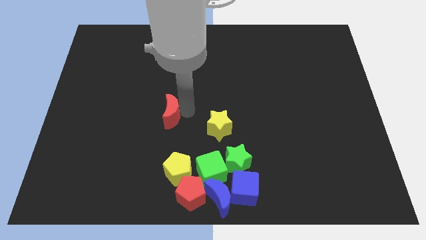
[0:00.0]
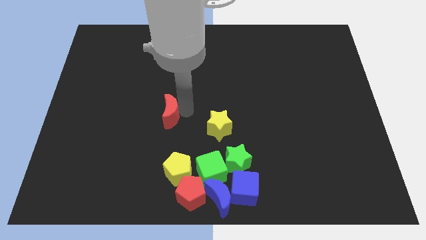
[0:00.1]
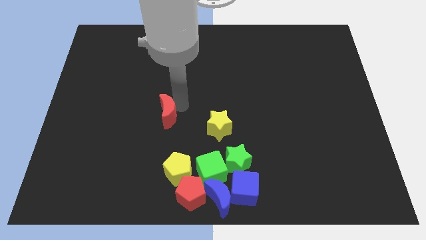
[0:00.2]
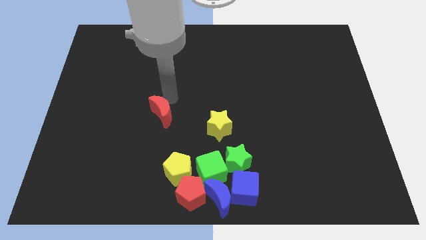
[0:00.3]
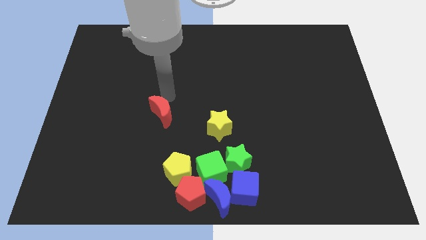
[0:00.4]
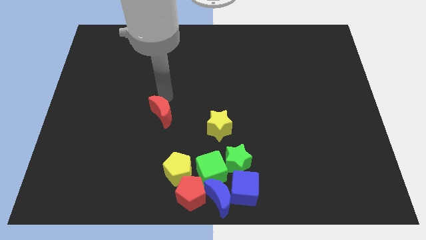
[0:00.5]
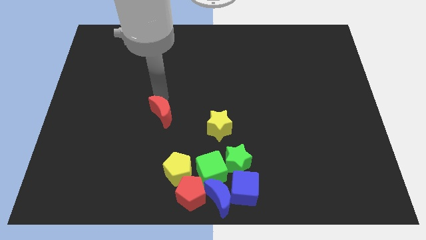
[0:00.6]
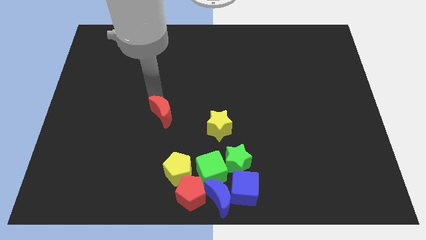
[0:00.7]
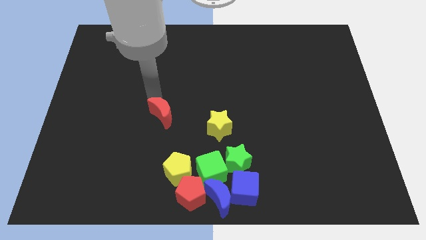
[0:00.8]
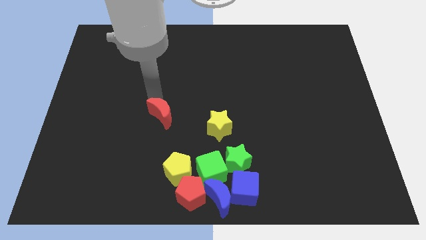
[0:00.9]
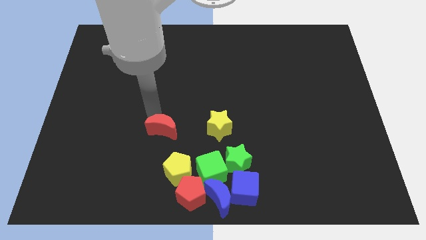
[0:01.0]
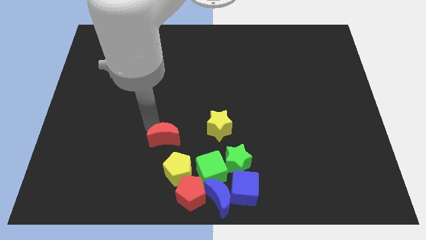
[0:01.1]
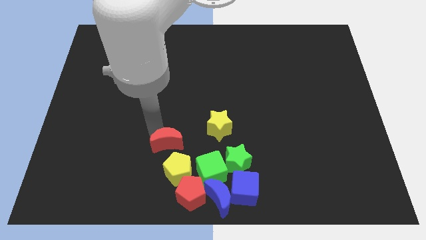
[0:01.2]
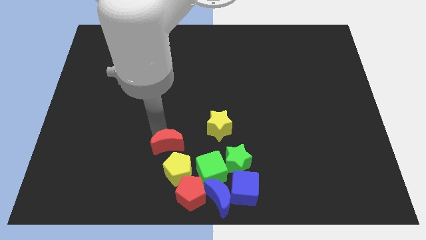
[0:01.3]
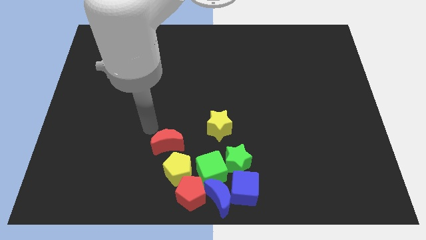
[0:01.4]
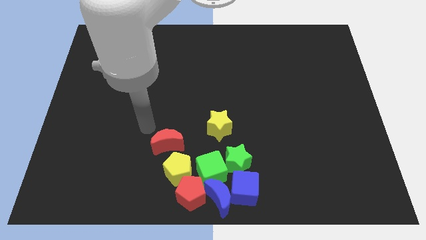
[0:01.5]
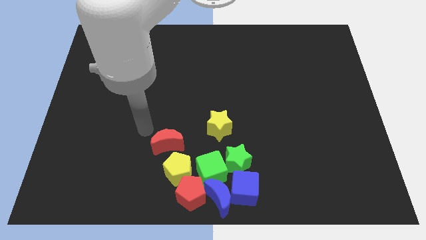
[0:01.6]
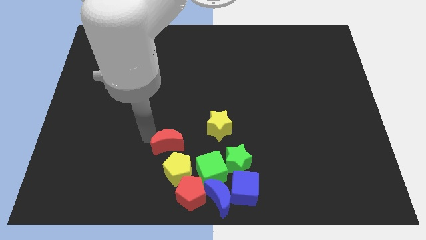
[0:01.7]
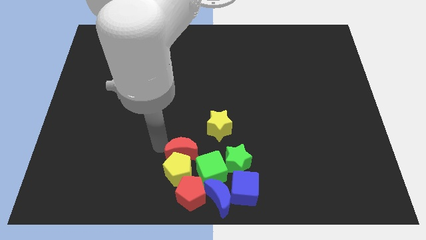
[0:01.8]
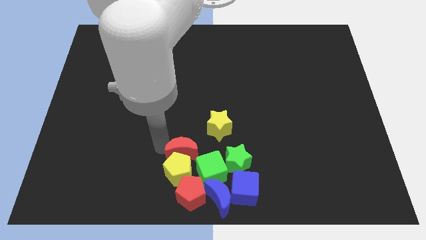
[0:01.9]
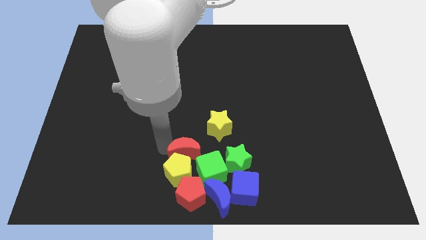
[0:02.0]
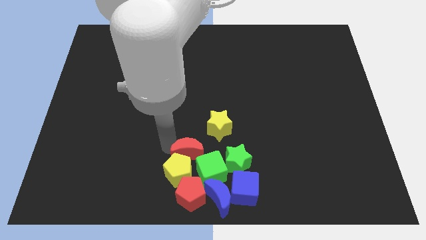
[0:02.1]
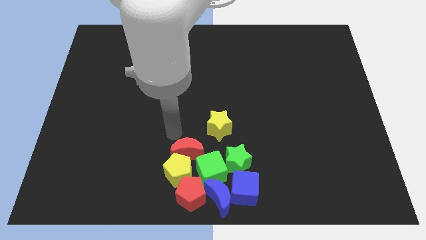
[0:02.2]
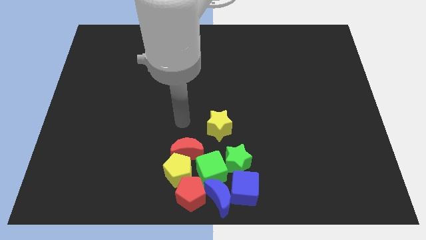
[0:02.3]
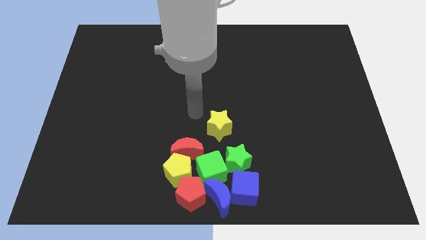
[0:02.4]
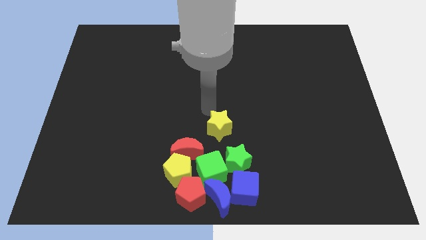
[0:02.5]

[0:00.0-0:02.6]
move the red crescent into the group of blocks

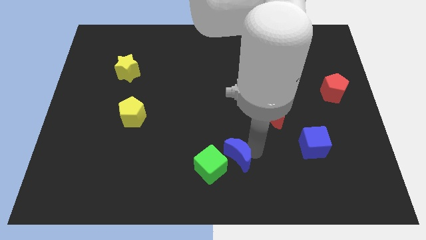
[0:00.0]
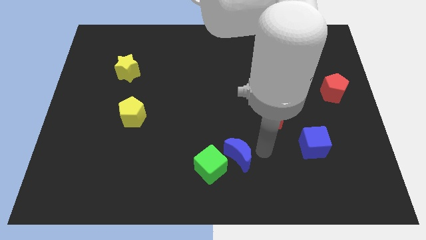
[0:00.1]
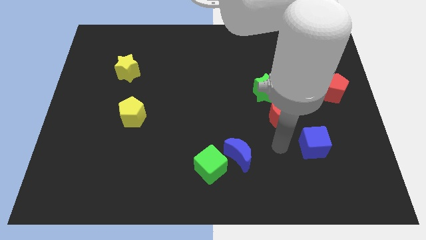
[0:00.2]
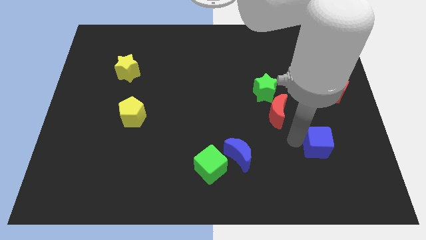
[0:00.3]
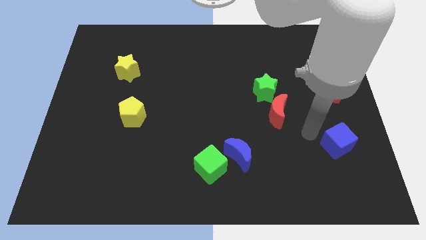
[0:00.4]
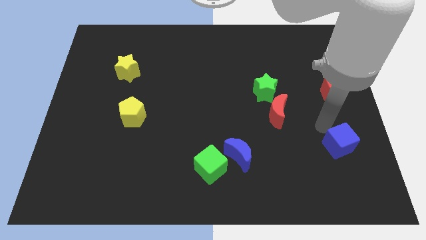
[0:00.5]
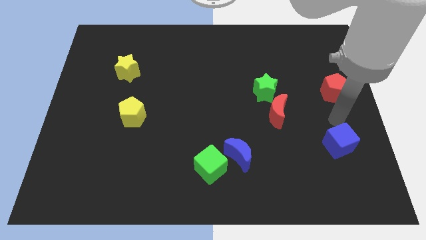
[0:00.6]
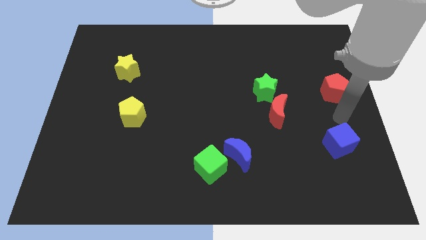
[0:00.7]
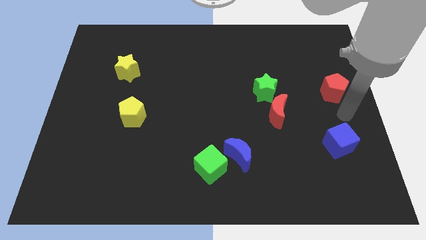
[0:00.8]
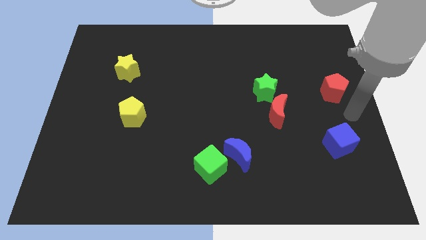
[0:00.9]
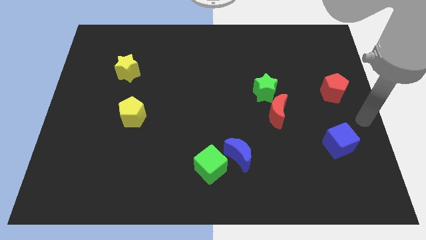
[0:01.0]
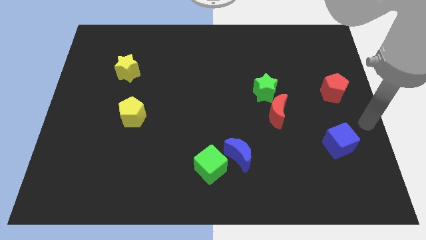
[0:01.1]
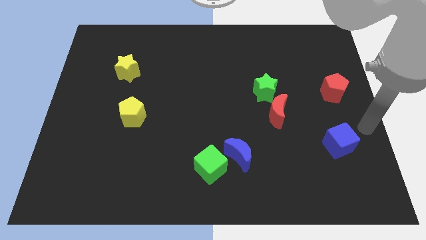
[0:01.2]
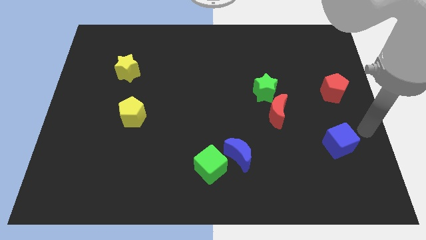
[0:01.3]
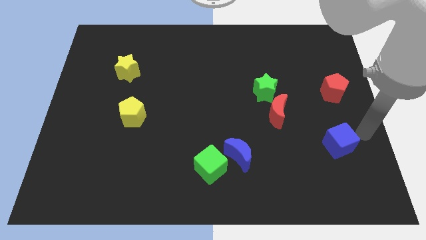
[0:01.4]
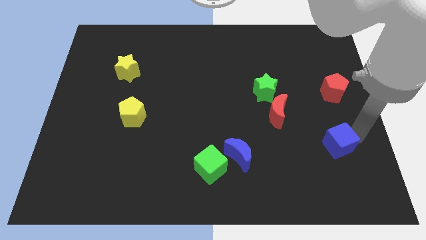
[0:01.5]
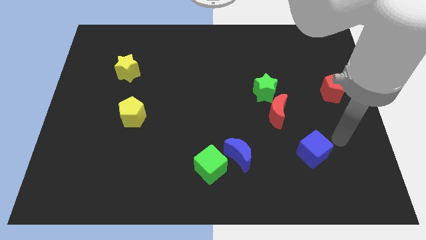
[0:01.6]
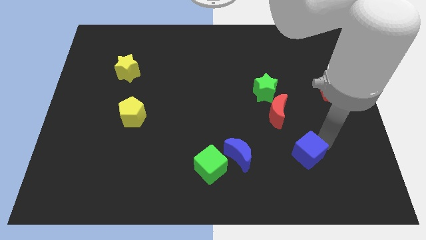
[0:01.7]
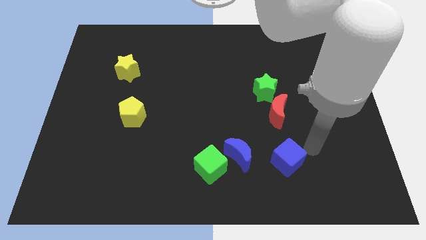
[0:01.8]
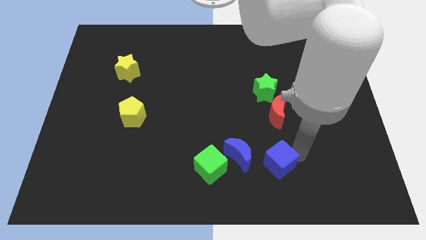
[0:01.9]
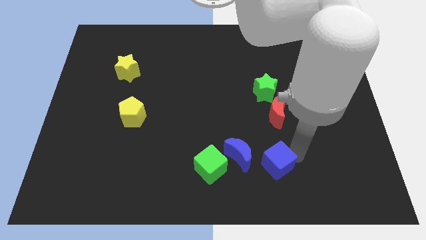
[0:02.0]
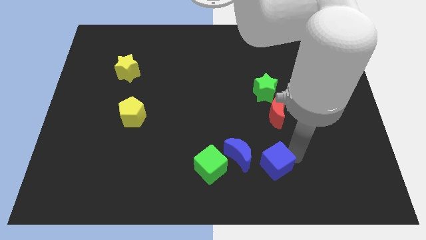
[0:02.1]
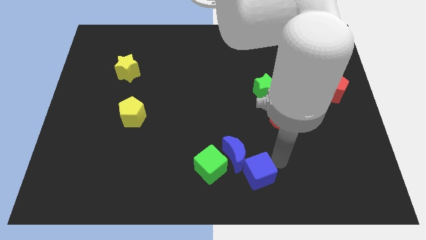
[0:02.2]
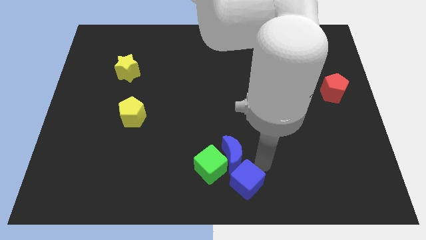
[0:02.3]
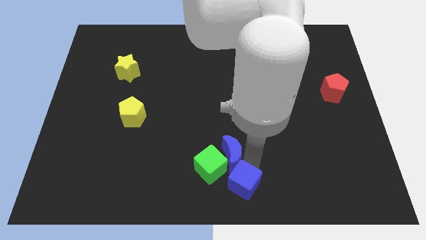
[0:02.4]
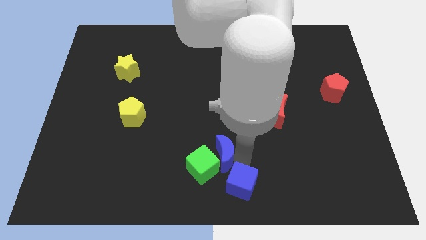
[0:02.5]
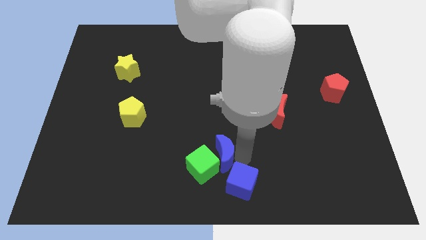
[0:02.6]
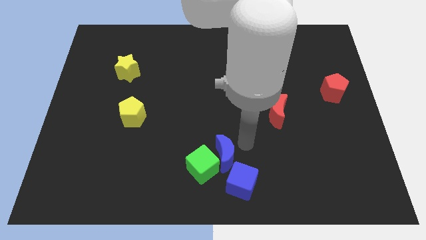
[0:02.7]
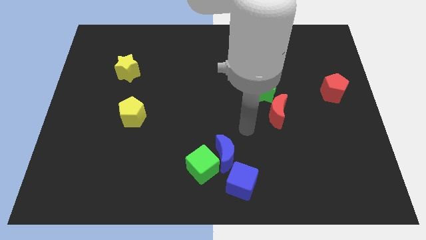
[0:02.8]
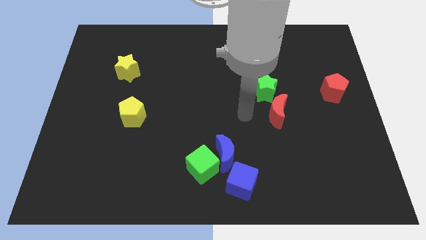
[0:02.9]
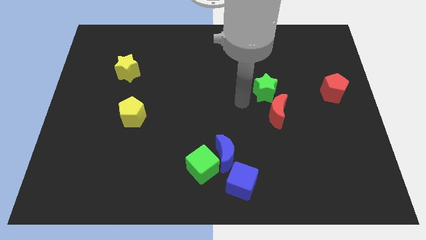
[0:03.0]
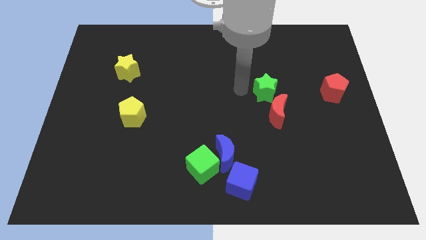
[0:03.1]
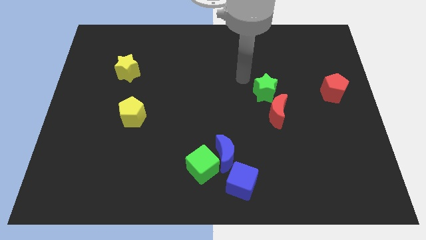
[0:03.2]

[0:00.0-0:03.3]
move the blue cube to the bottom of the blue crescent

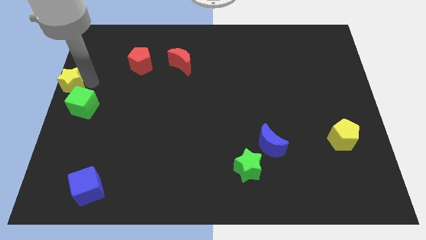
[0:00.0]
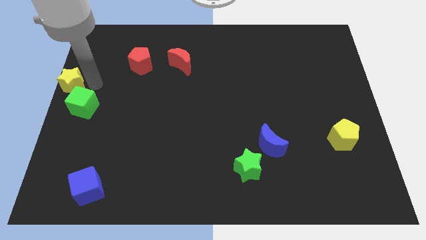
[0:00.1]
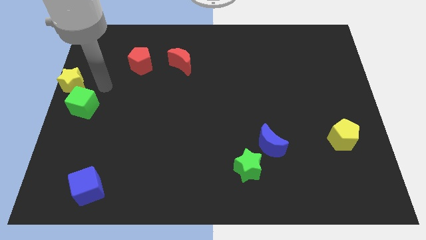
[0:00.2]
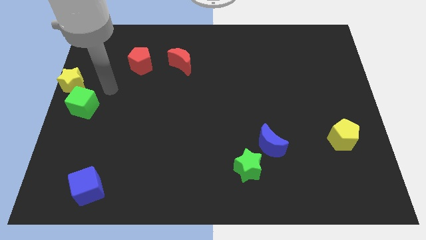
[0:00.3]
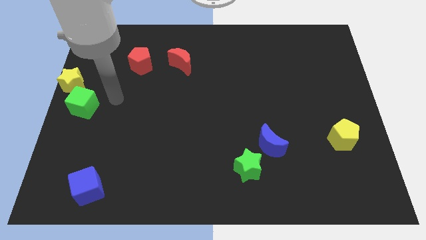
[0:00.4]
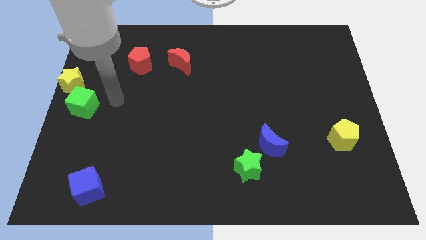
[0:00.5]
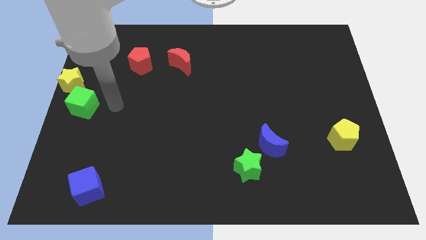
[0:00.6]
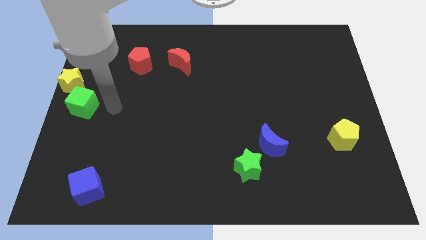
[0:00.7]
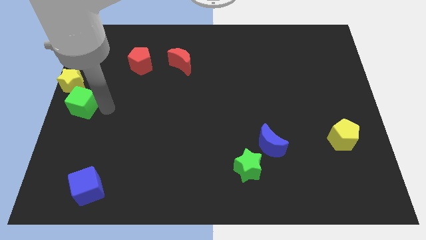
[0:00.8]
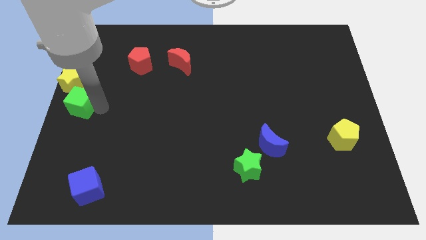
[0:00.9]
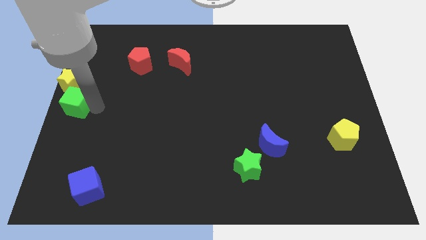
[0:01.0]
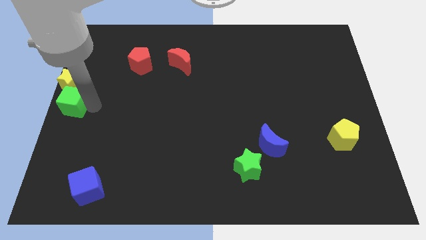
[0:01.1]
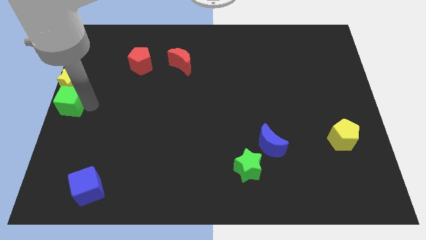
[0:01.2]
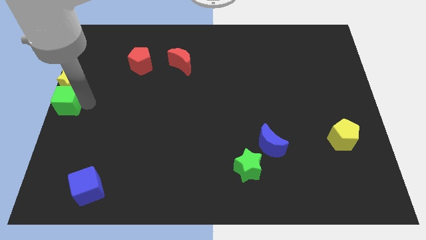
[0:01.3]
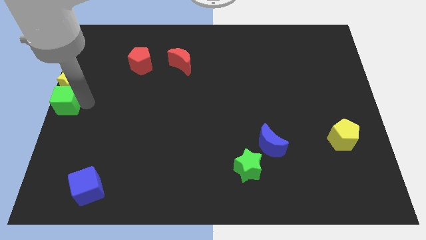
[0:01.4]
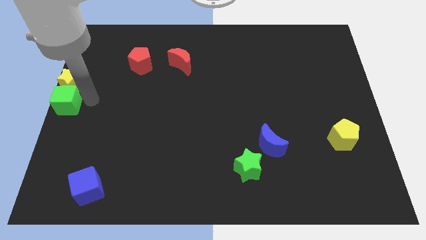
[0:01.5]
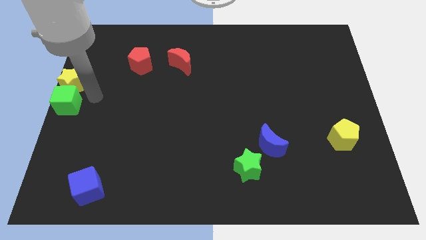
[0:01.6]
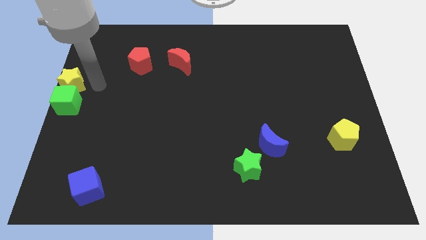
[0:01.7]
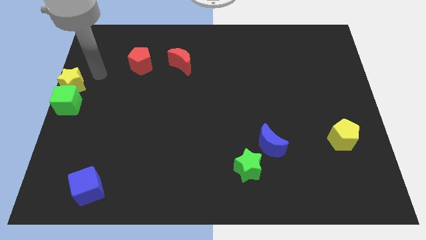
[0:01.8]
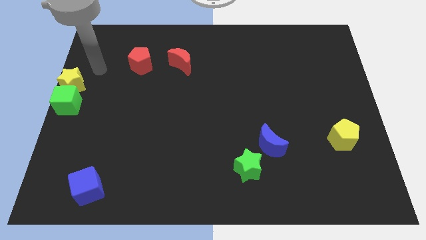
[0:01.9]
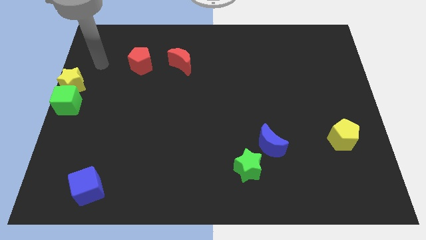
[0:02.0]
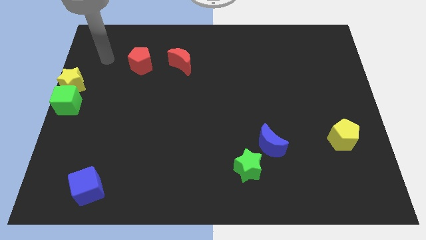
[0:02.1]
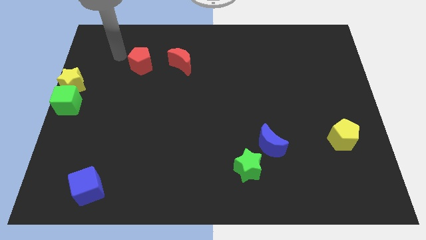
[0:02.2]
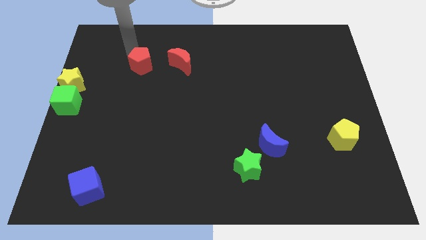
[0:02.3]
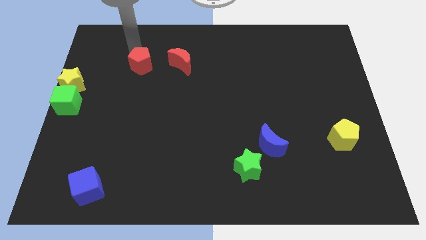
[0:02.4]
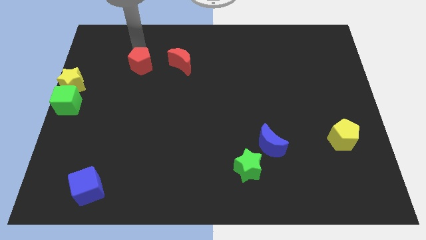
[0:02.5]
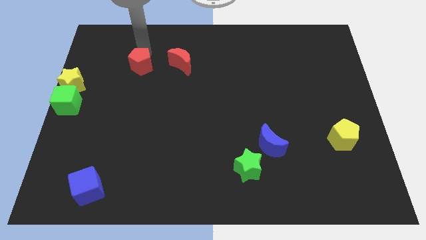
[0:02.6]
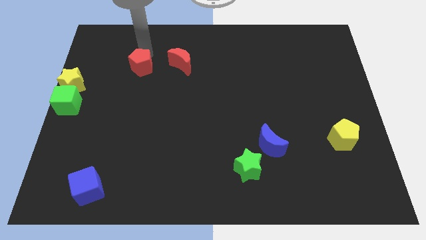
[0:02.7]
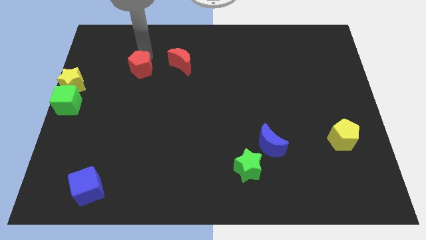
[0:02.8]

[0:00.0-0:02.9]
place the green cube to the left center of the board

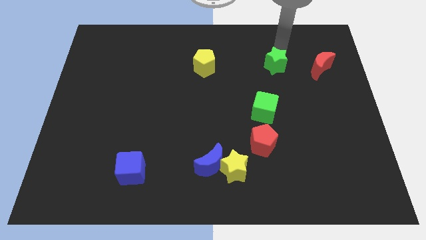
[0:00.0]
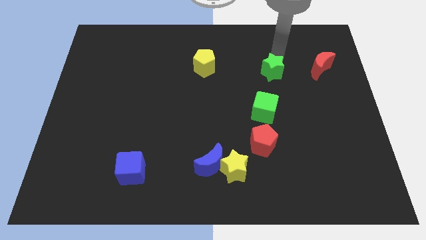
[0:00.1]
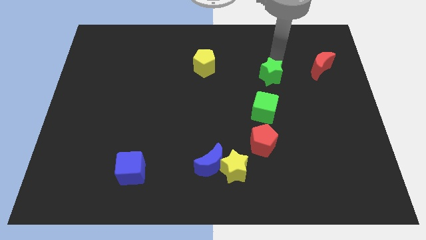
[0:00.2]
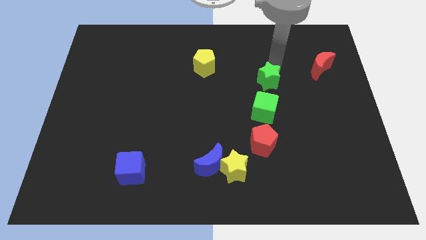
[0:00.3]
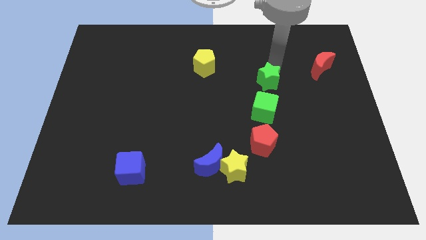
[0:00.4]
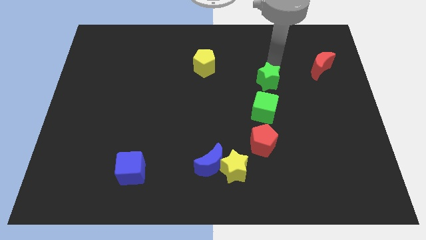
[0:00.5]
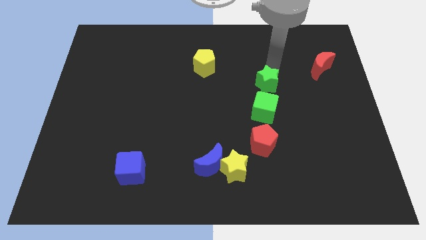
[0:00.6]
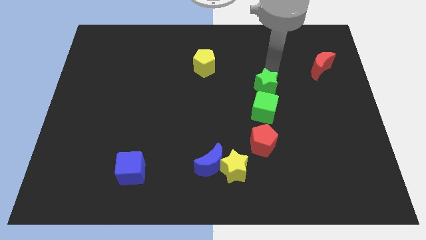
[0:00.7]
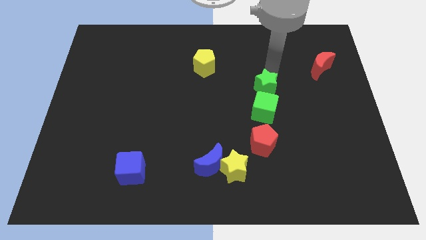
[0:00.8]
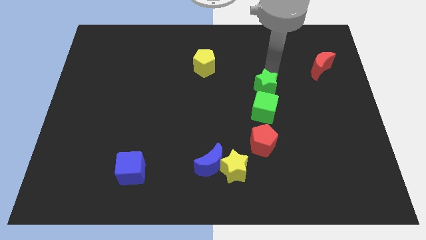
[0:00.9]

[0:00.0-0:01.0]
put the green star above the green cube
